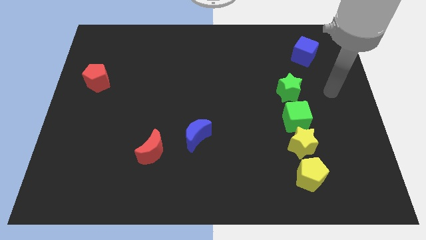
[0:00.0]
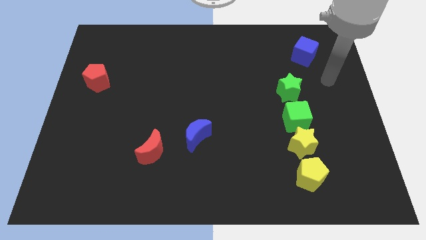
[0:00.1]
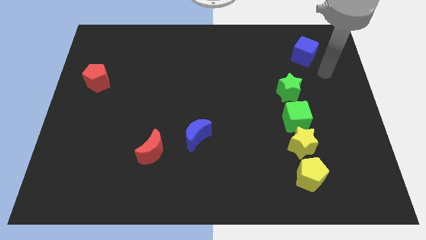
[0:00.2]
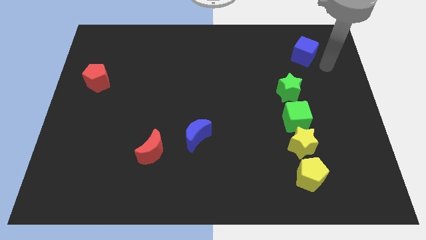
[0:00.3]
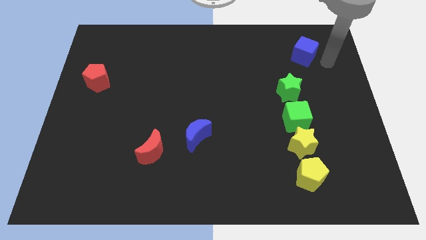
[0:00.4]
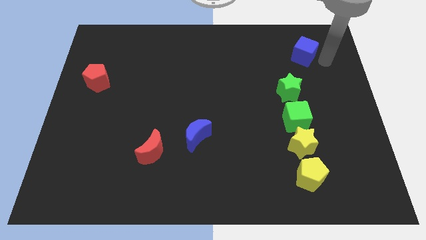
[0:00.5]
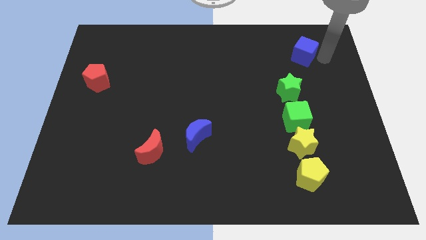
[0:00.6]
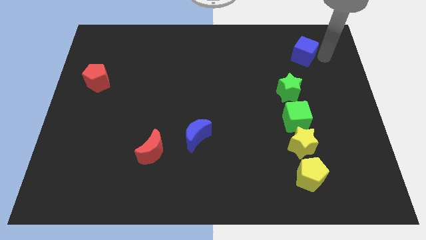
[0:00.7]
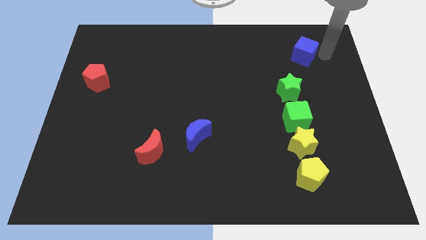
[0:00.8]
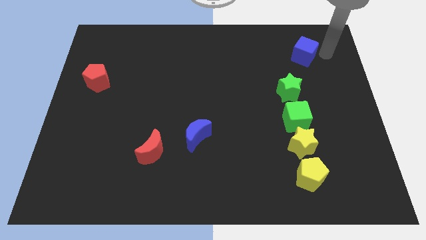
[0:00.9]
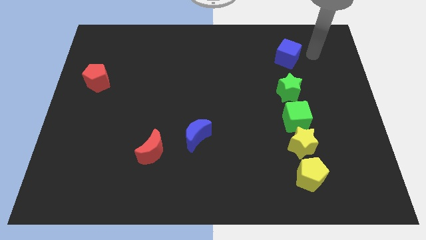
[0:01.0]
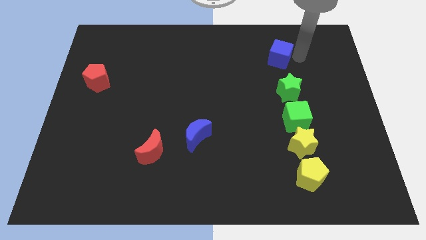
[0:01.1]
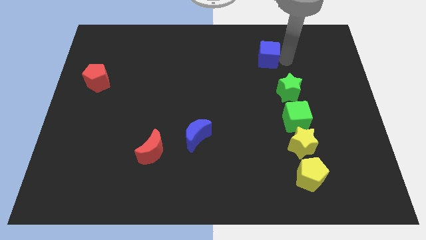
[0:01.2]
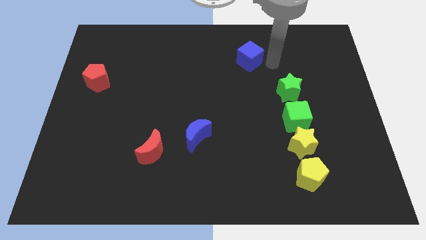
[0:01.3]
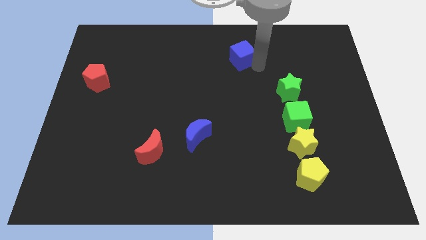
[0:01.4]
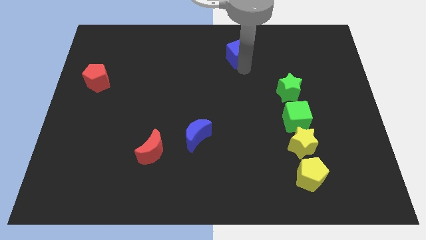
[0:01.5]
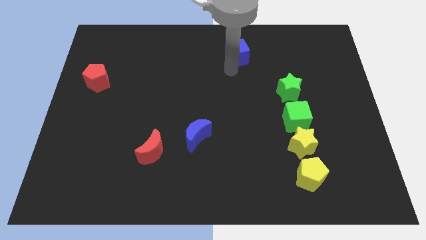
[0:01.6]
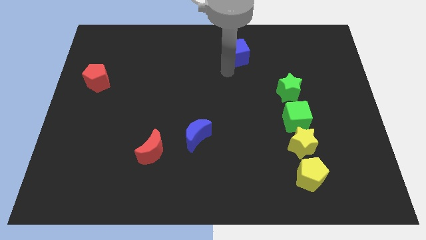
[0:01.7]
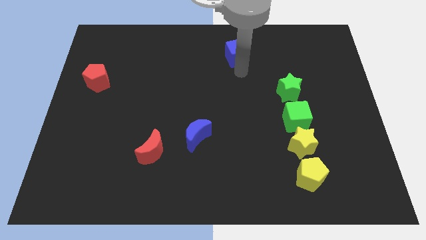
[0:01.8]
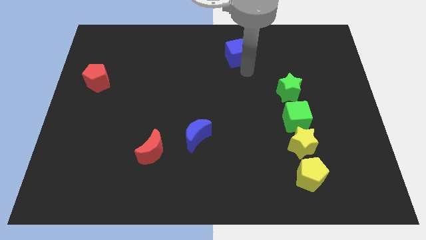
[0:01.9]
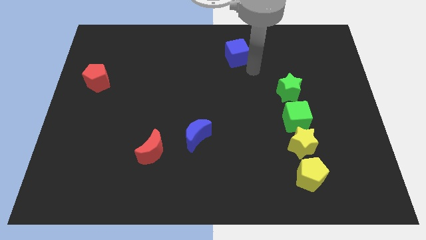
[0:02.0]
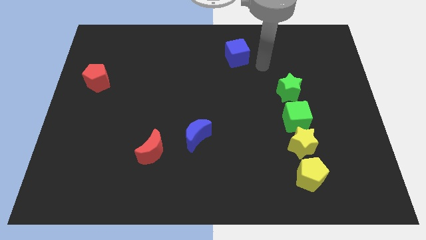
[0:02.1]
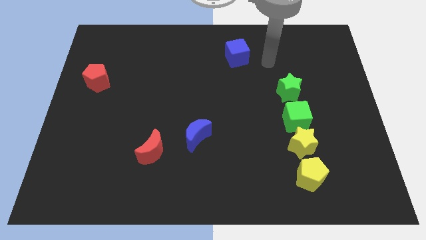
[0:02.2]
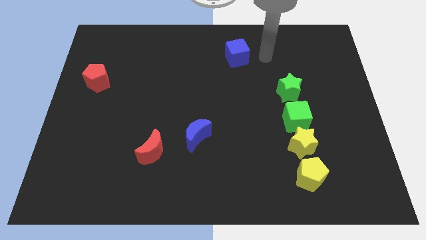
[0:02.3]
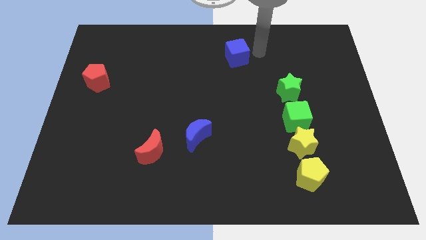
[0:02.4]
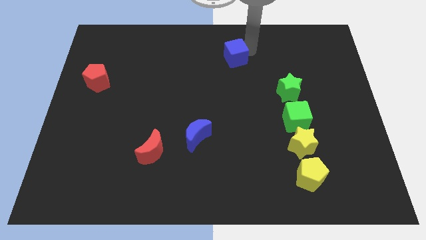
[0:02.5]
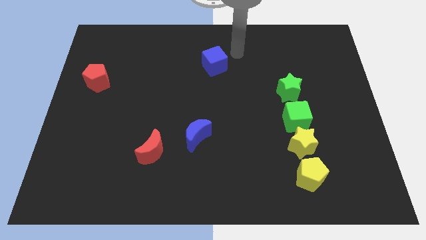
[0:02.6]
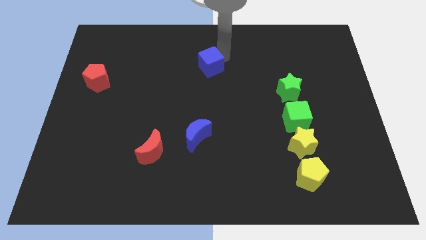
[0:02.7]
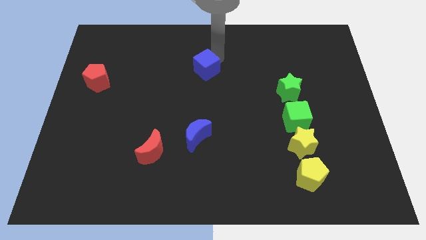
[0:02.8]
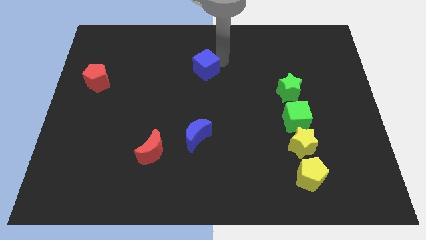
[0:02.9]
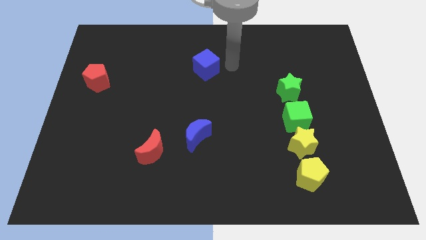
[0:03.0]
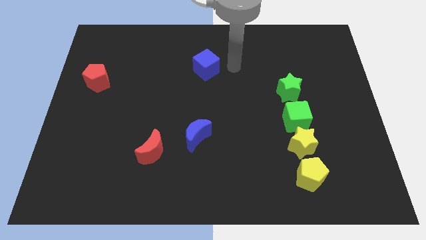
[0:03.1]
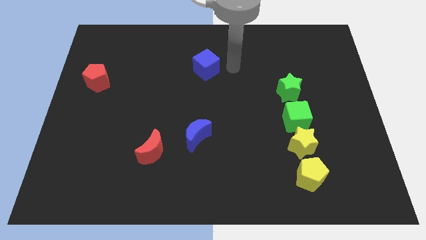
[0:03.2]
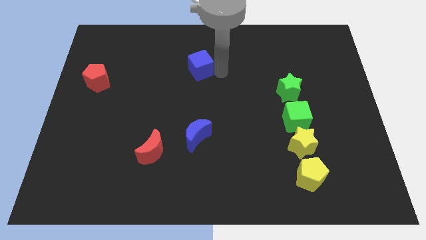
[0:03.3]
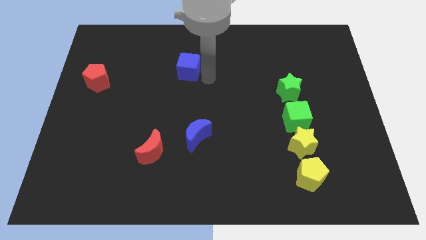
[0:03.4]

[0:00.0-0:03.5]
place the blue cube above the blue moon

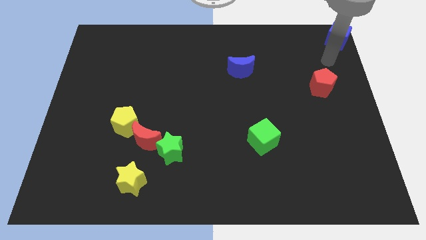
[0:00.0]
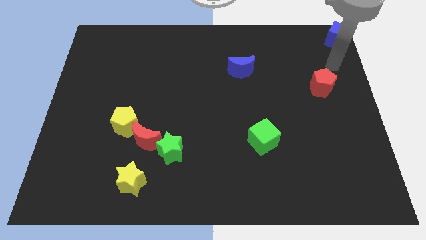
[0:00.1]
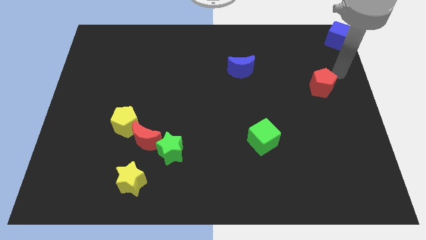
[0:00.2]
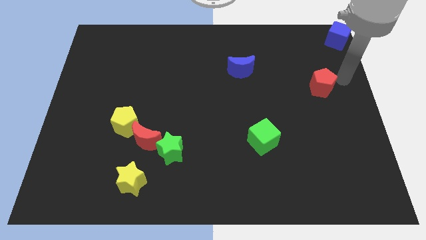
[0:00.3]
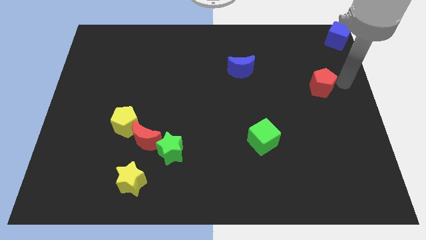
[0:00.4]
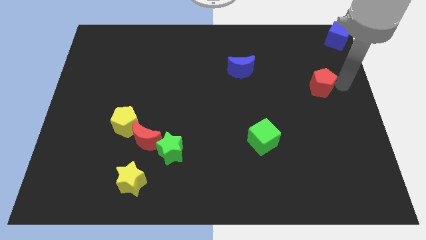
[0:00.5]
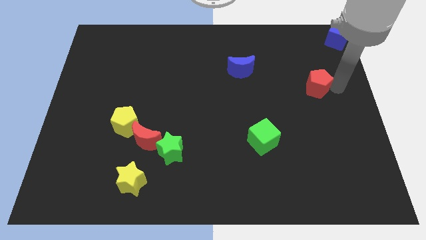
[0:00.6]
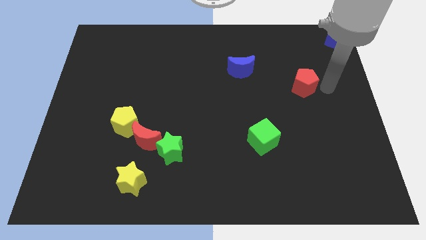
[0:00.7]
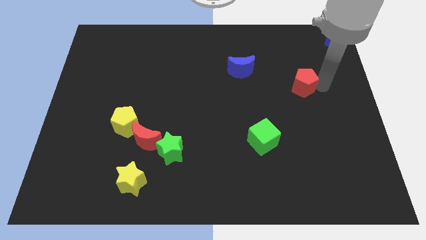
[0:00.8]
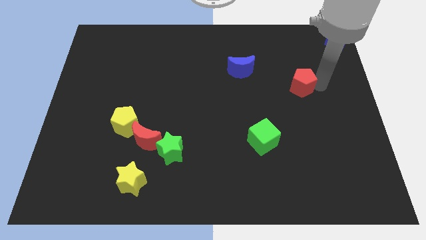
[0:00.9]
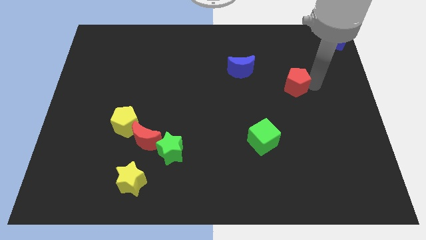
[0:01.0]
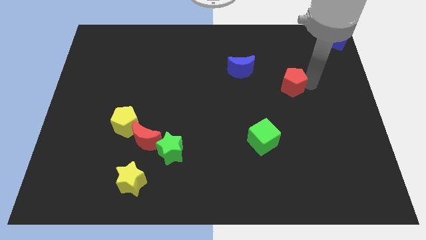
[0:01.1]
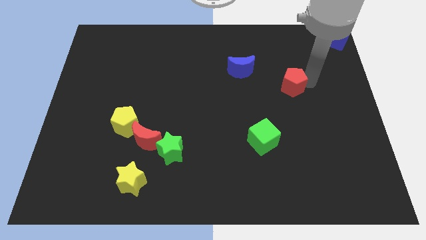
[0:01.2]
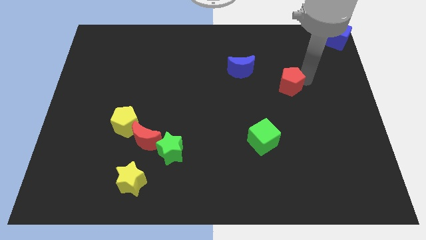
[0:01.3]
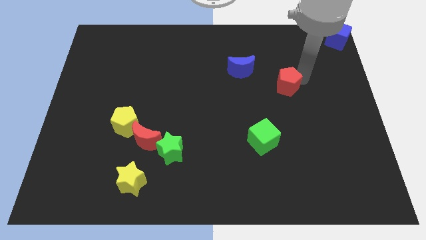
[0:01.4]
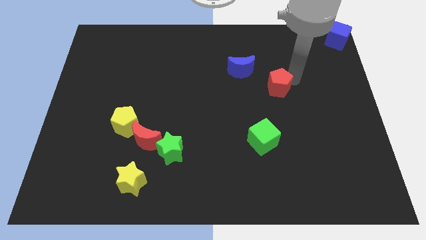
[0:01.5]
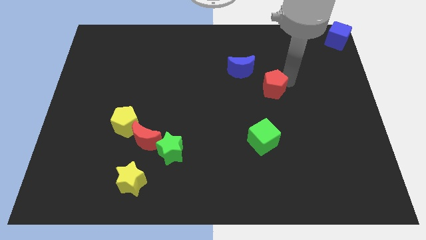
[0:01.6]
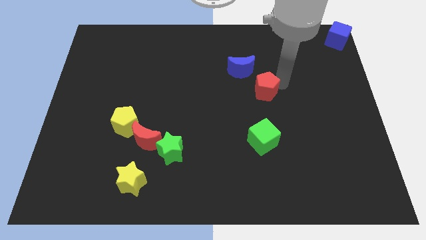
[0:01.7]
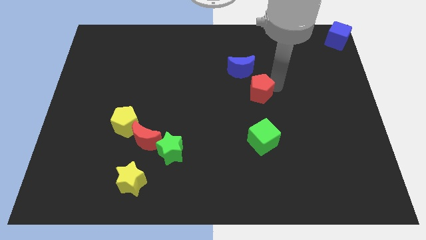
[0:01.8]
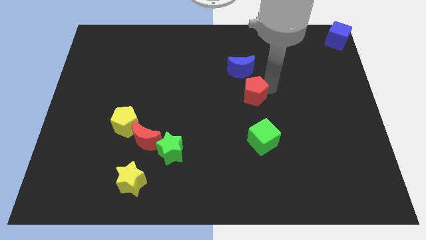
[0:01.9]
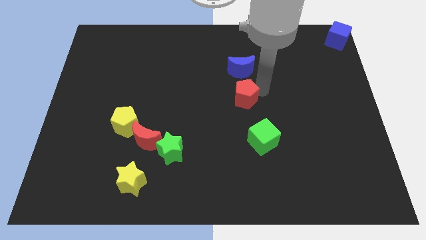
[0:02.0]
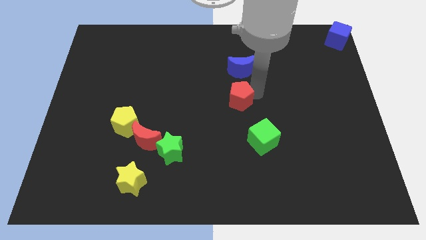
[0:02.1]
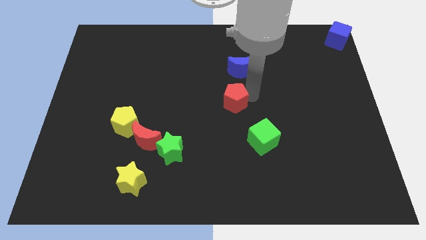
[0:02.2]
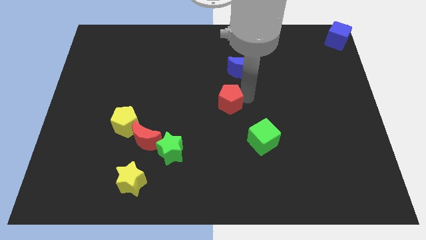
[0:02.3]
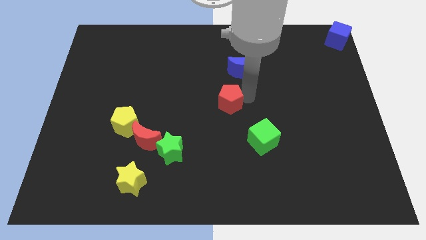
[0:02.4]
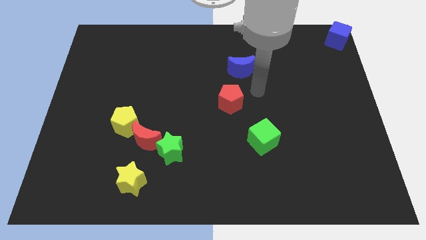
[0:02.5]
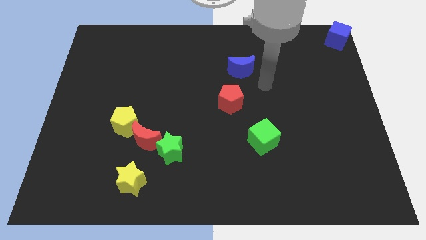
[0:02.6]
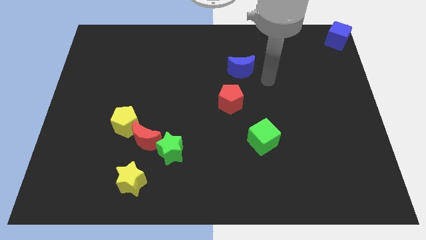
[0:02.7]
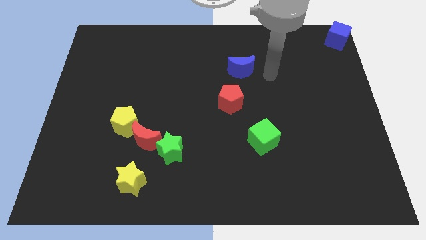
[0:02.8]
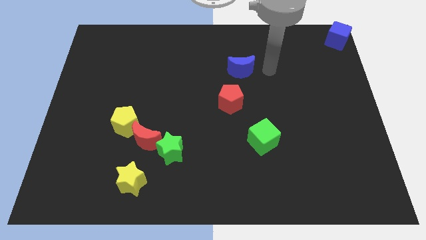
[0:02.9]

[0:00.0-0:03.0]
move red pentagon towards center of the board

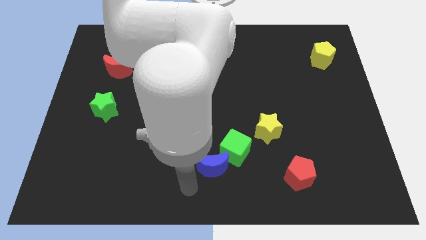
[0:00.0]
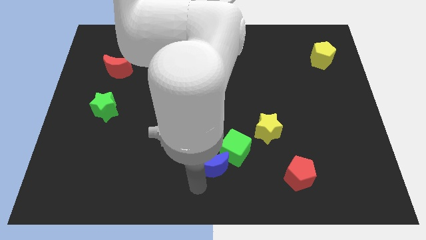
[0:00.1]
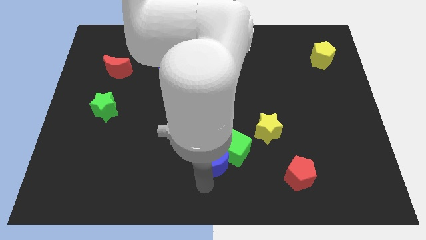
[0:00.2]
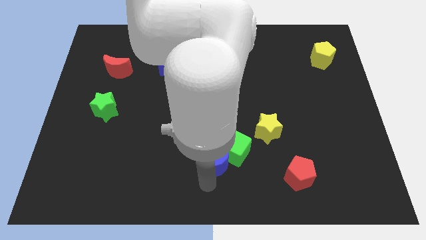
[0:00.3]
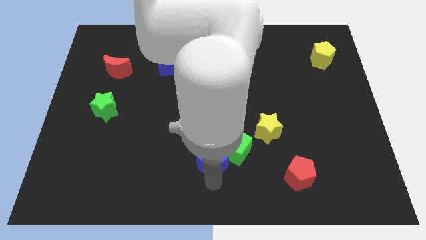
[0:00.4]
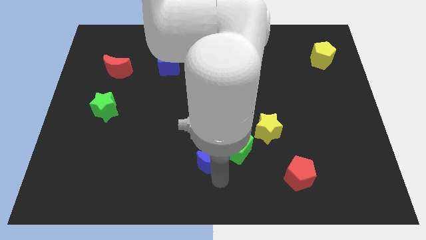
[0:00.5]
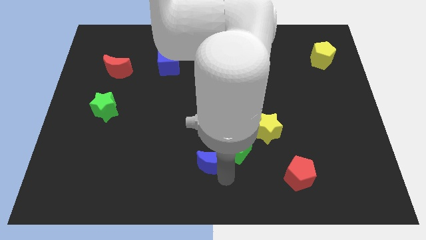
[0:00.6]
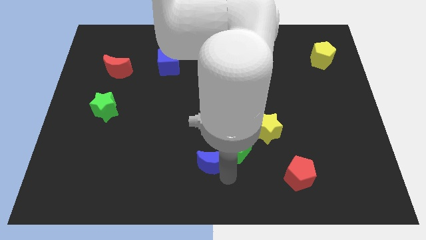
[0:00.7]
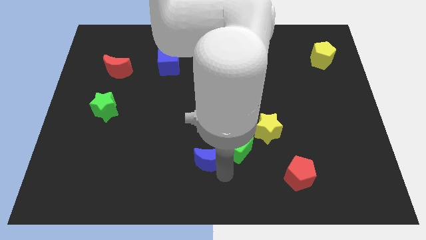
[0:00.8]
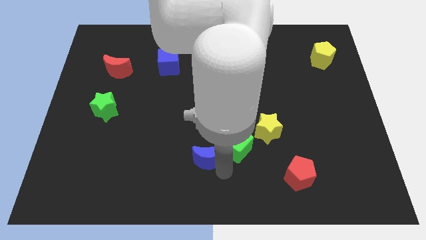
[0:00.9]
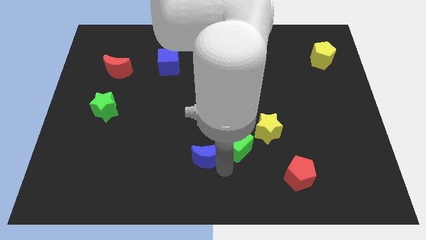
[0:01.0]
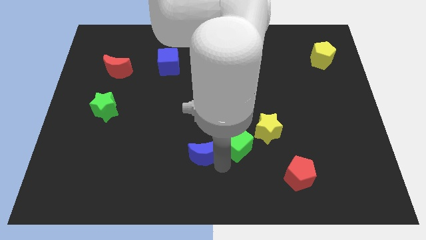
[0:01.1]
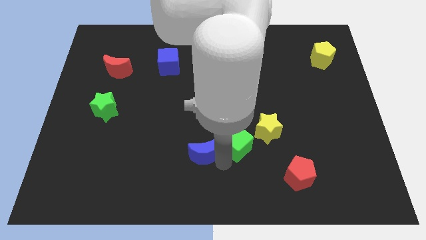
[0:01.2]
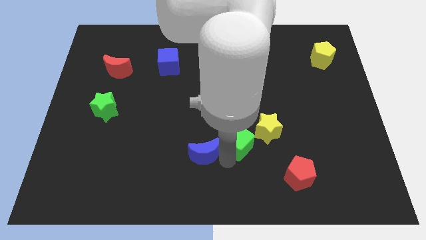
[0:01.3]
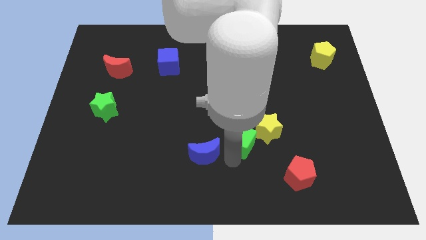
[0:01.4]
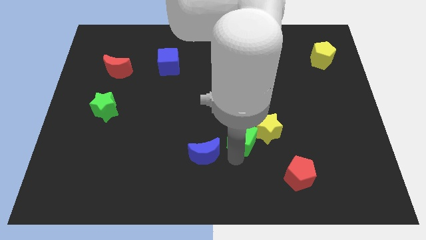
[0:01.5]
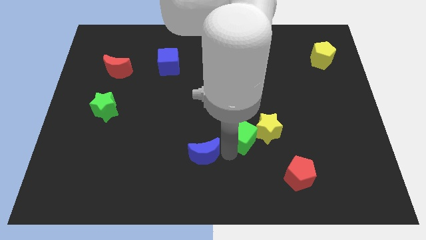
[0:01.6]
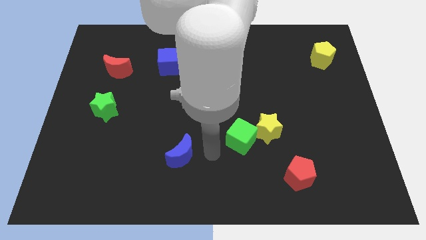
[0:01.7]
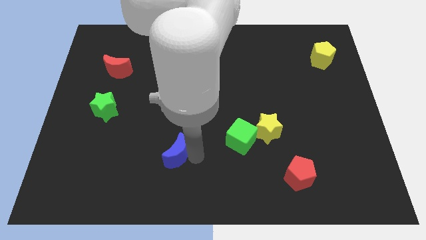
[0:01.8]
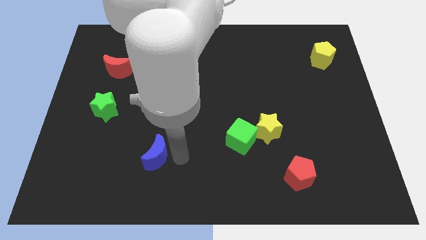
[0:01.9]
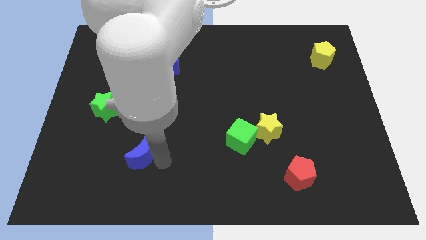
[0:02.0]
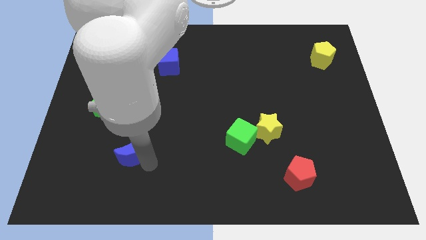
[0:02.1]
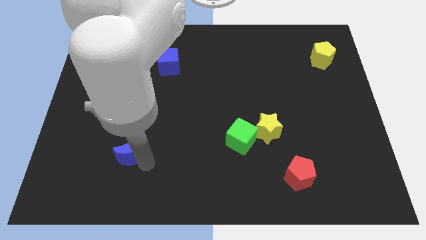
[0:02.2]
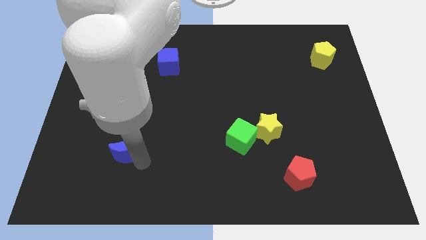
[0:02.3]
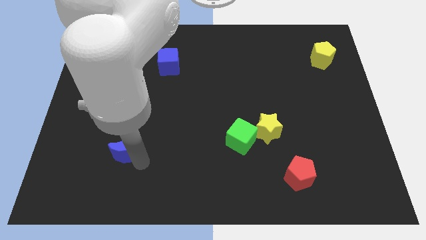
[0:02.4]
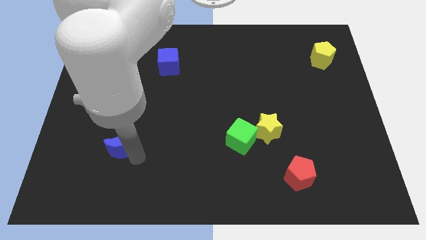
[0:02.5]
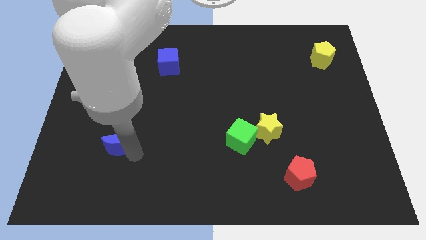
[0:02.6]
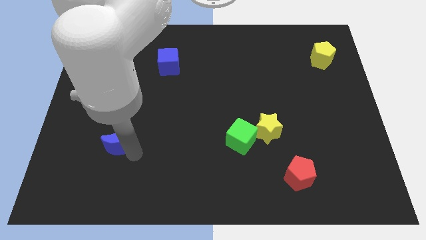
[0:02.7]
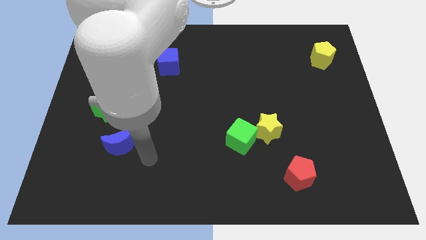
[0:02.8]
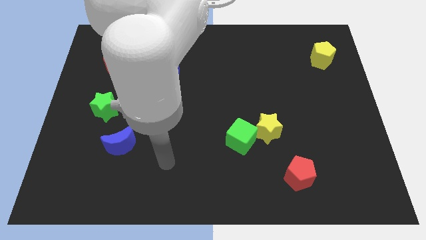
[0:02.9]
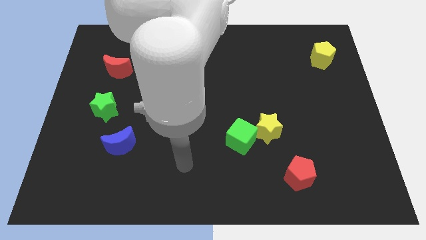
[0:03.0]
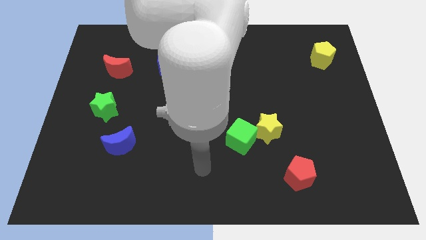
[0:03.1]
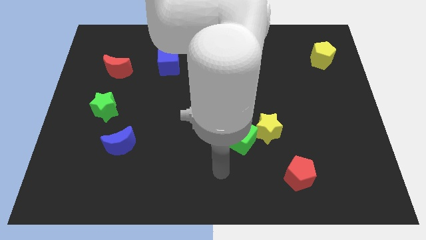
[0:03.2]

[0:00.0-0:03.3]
place blue crescent below the green star
